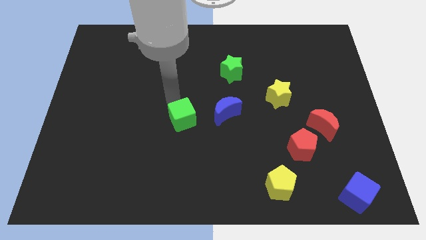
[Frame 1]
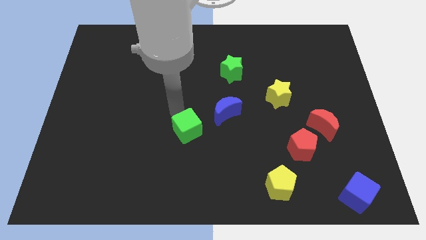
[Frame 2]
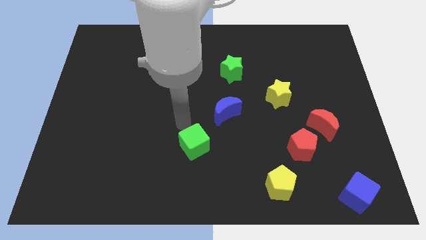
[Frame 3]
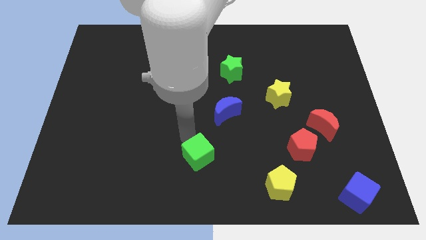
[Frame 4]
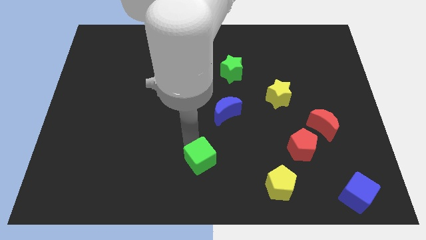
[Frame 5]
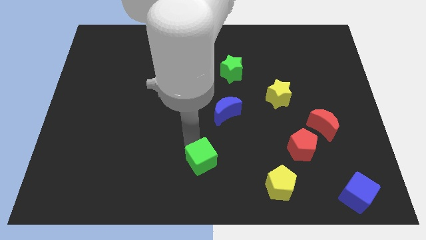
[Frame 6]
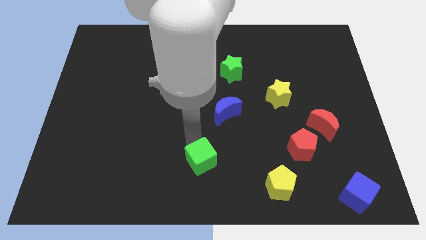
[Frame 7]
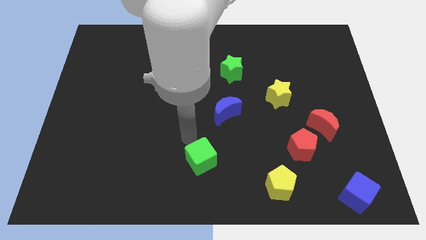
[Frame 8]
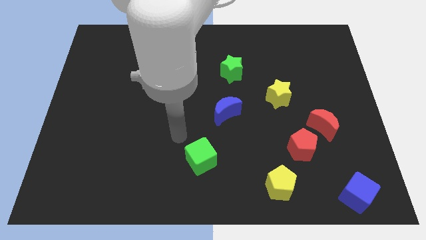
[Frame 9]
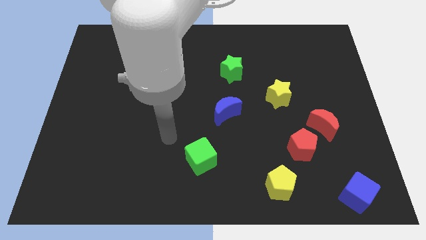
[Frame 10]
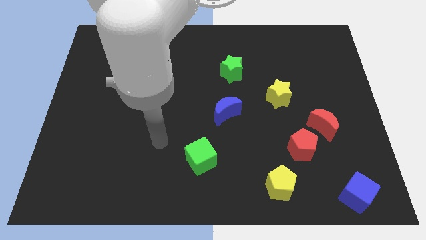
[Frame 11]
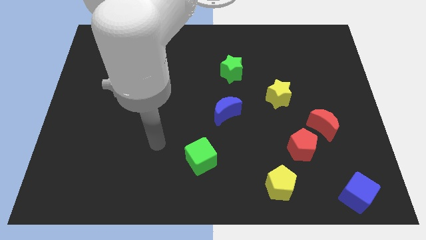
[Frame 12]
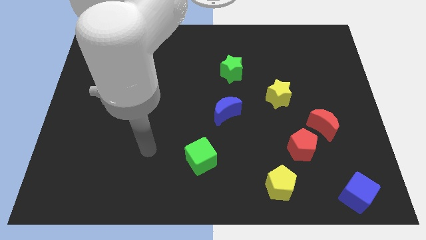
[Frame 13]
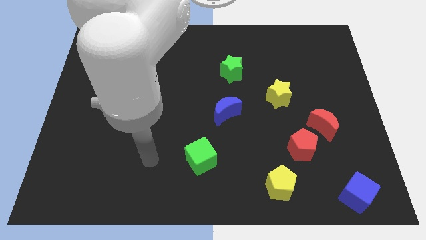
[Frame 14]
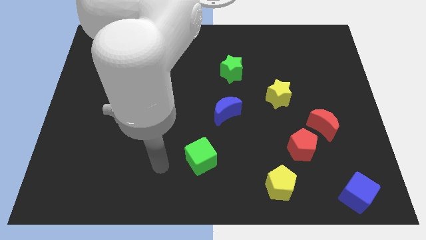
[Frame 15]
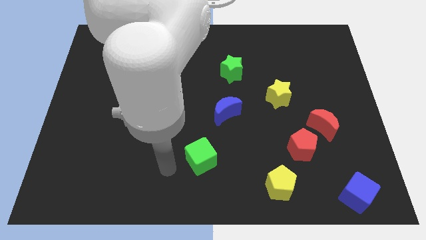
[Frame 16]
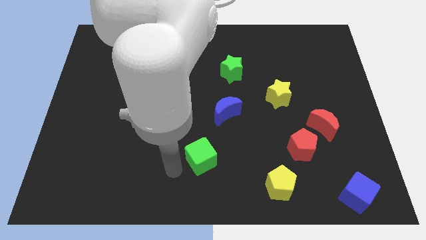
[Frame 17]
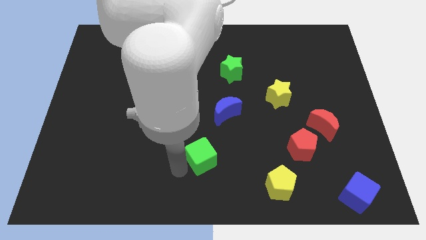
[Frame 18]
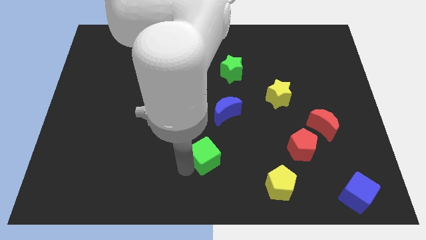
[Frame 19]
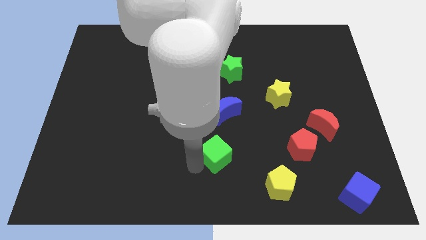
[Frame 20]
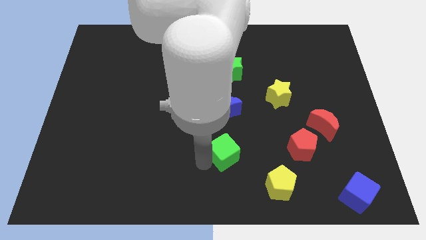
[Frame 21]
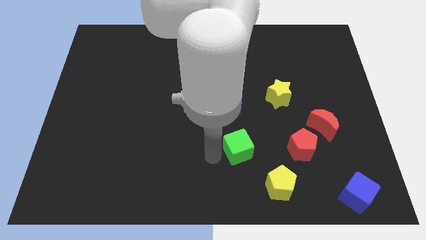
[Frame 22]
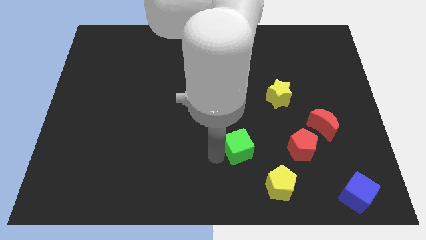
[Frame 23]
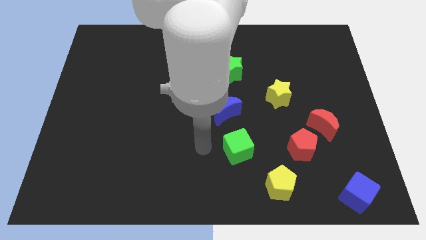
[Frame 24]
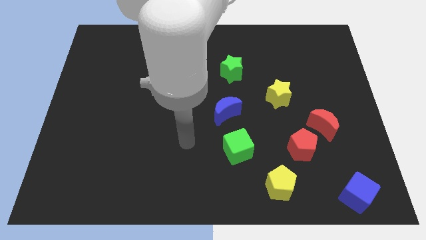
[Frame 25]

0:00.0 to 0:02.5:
move the green cube to the bottom side of the blue moon

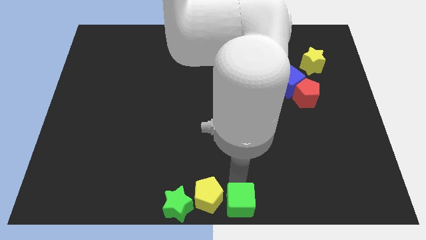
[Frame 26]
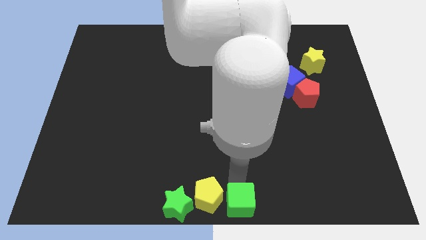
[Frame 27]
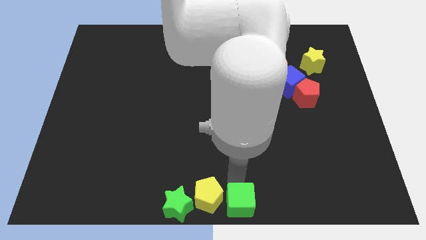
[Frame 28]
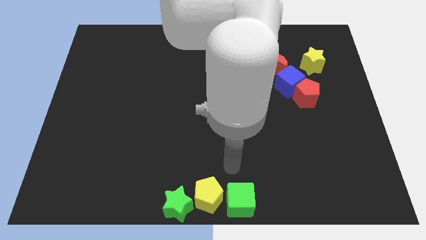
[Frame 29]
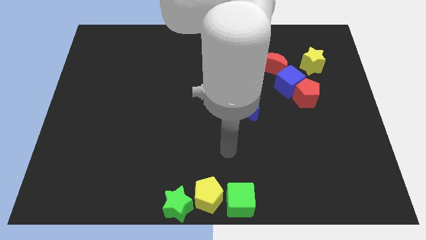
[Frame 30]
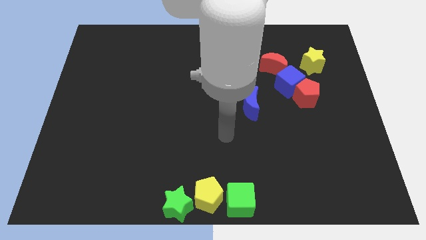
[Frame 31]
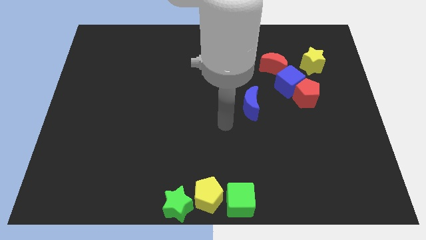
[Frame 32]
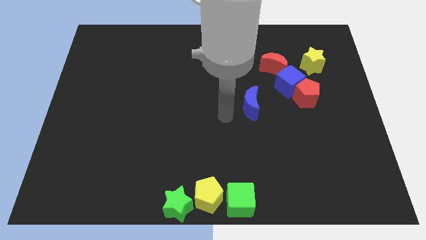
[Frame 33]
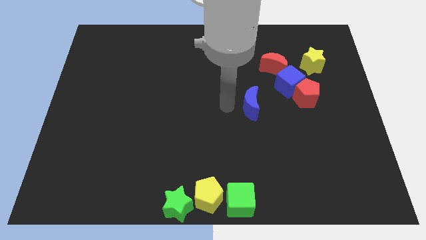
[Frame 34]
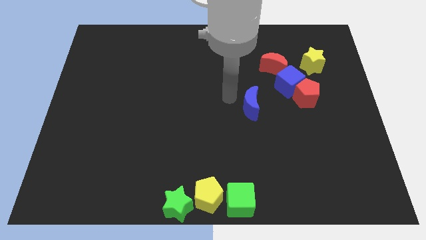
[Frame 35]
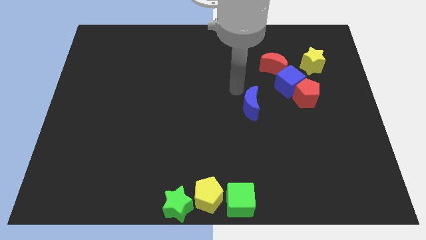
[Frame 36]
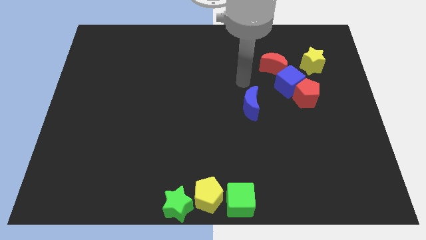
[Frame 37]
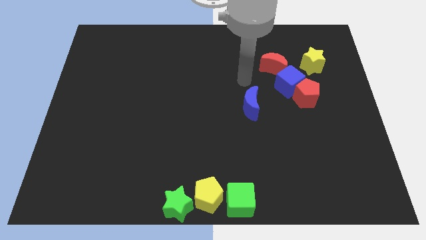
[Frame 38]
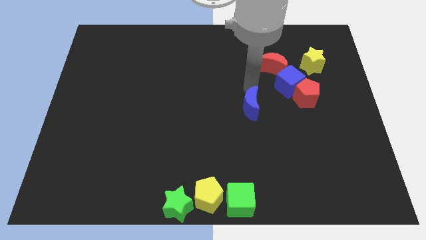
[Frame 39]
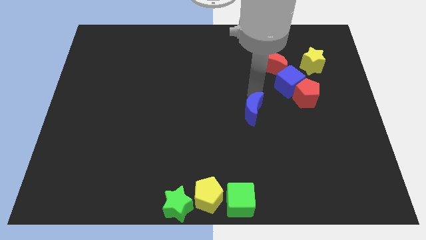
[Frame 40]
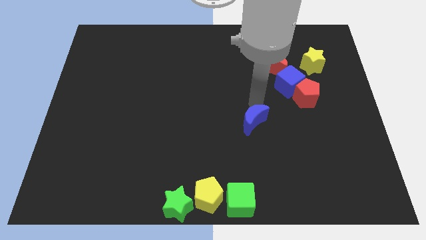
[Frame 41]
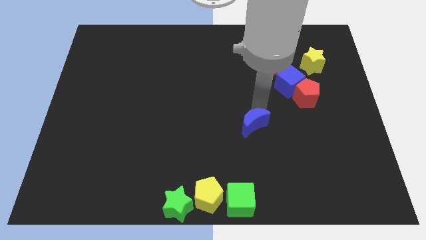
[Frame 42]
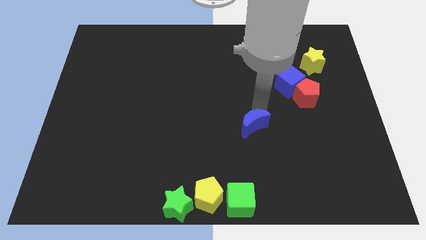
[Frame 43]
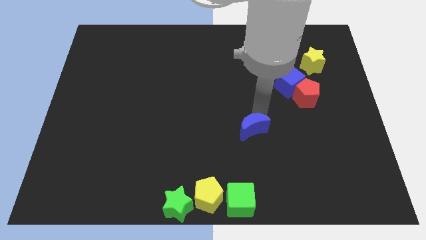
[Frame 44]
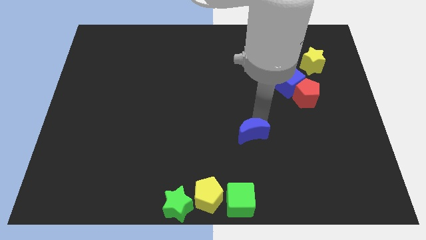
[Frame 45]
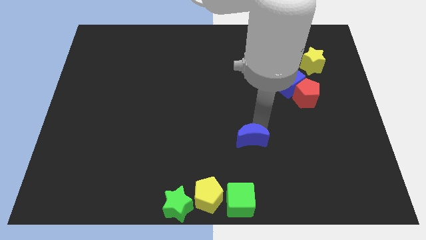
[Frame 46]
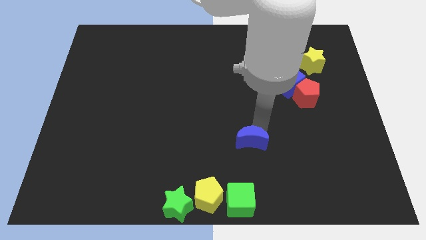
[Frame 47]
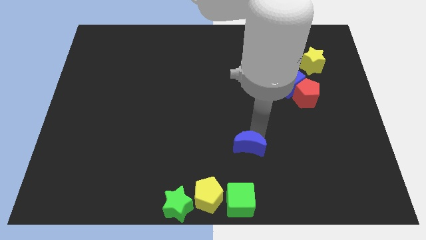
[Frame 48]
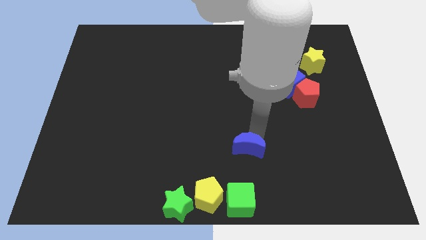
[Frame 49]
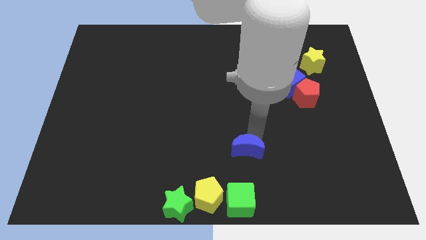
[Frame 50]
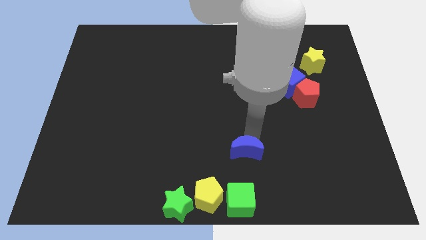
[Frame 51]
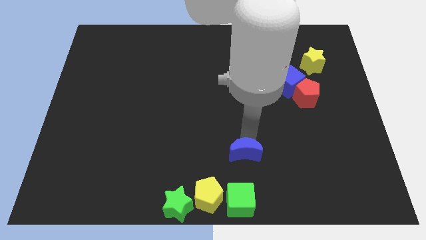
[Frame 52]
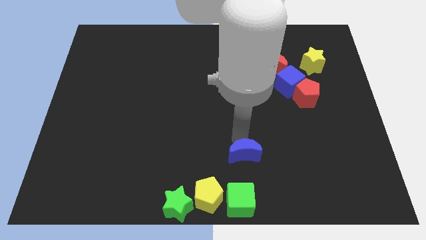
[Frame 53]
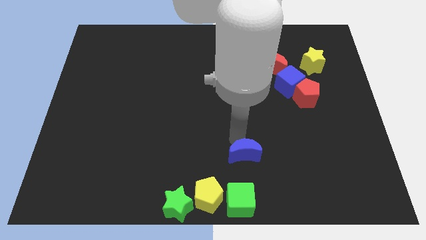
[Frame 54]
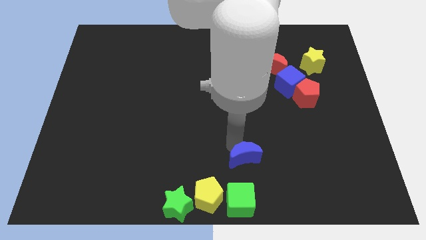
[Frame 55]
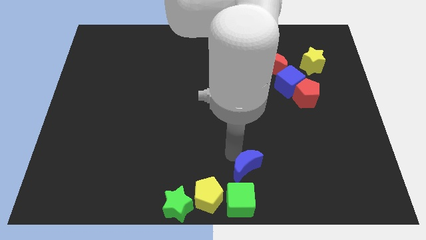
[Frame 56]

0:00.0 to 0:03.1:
drag the blue moon close to the green cube

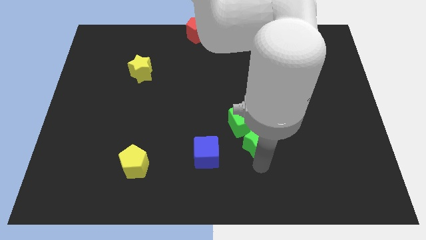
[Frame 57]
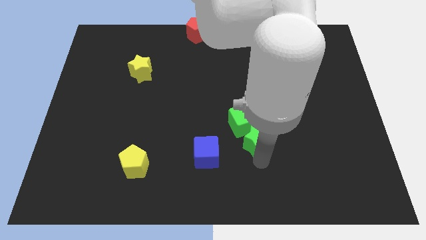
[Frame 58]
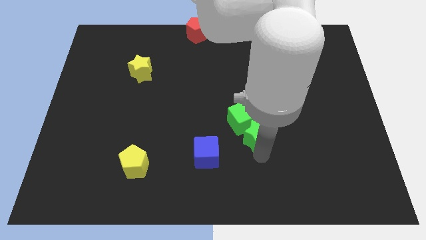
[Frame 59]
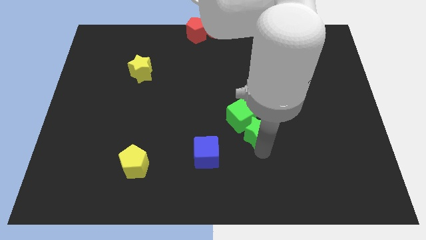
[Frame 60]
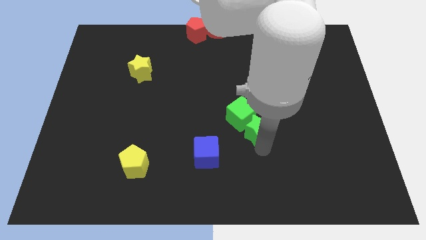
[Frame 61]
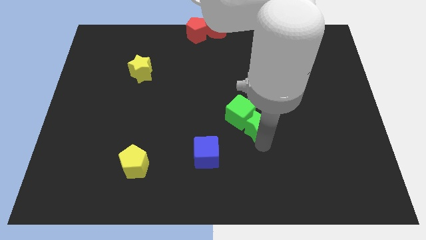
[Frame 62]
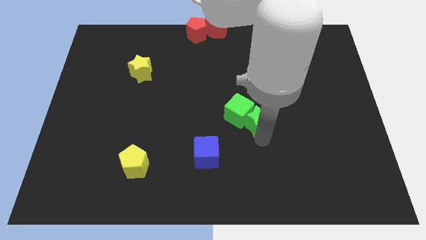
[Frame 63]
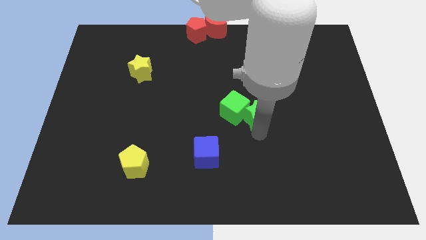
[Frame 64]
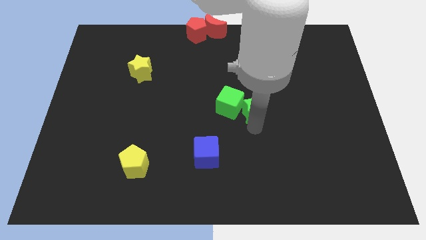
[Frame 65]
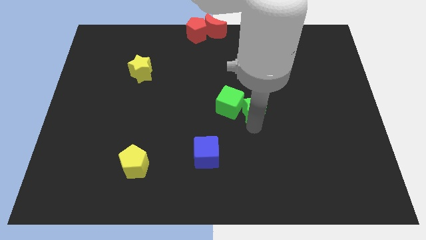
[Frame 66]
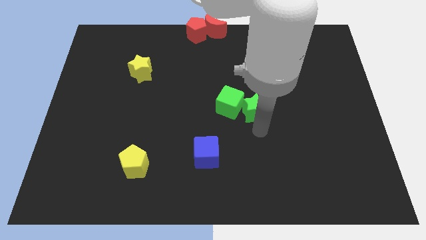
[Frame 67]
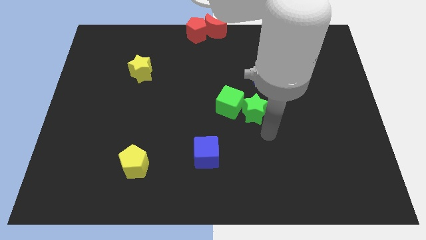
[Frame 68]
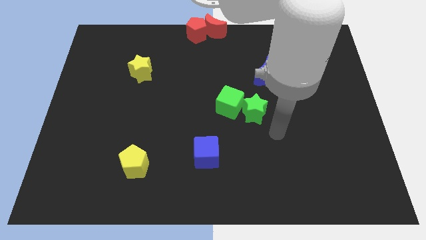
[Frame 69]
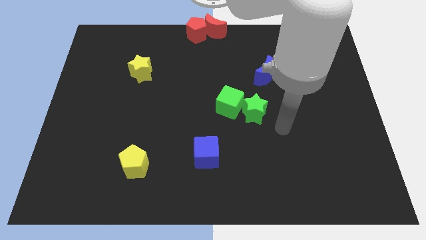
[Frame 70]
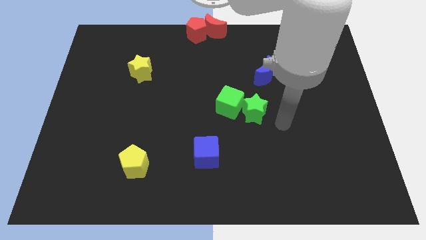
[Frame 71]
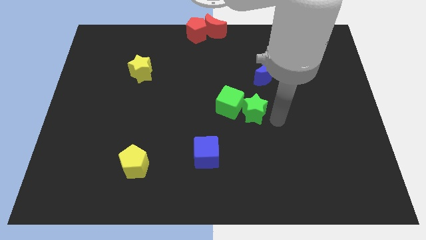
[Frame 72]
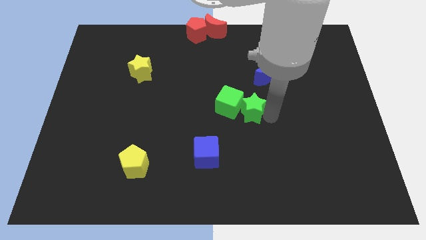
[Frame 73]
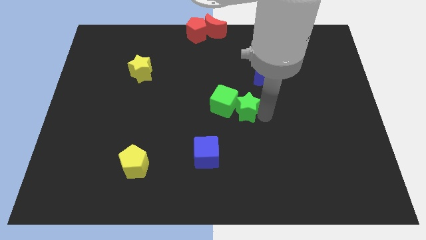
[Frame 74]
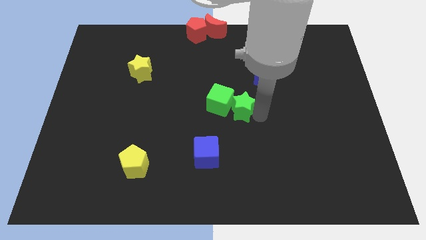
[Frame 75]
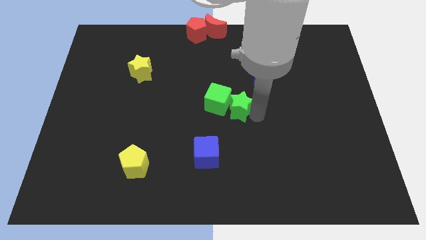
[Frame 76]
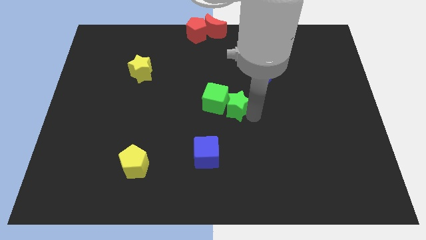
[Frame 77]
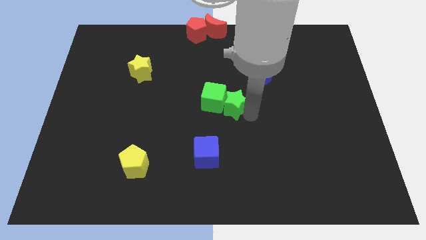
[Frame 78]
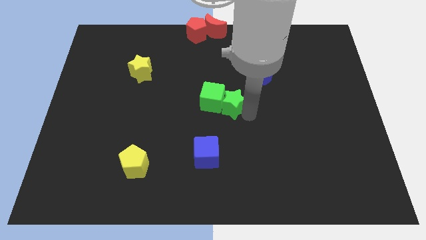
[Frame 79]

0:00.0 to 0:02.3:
place the green blocks in the middle of the board

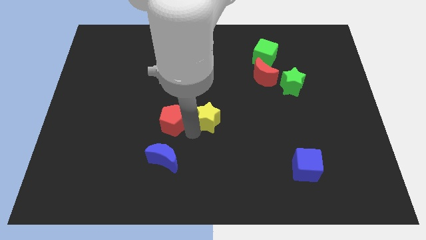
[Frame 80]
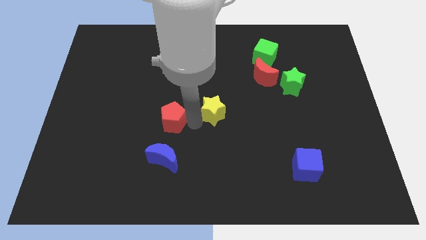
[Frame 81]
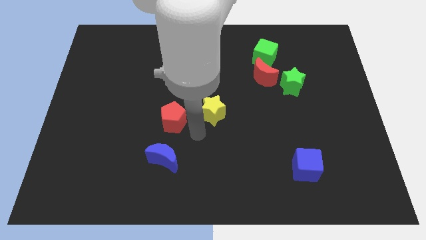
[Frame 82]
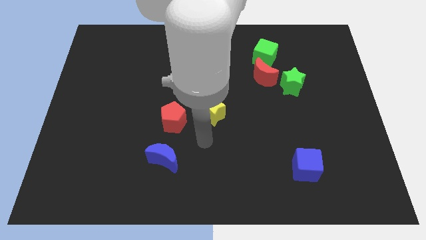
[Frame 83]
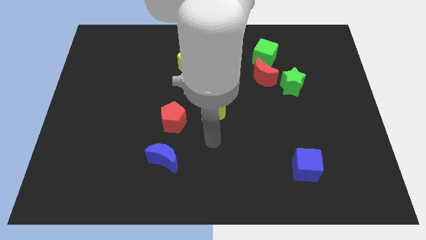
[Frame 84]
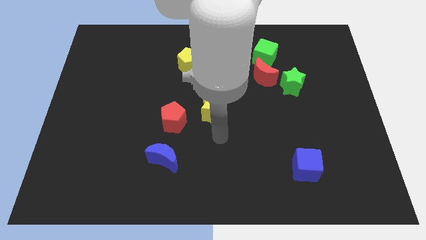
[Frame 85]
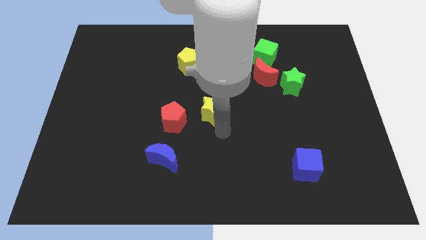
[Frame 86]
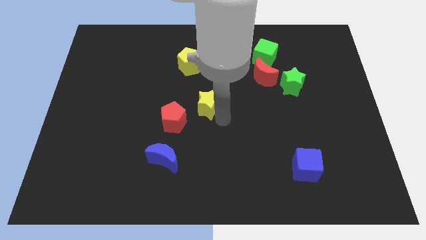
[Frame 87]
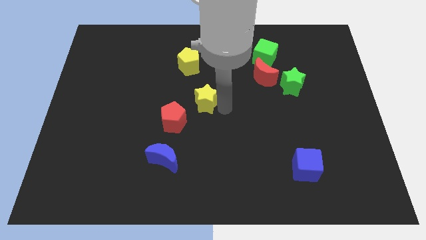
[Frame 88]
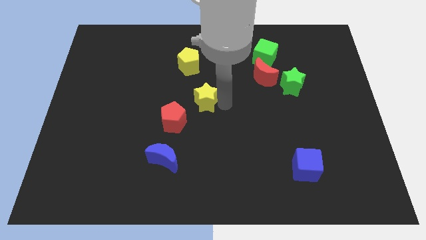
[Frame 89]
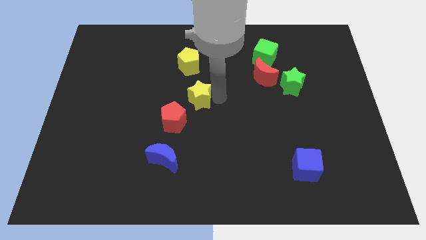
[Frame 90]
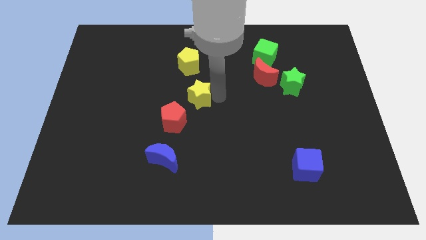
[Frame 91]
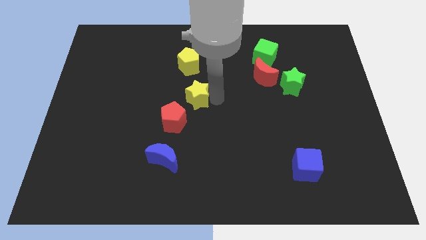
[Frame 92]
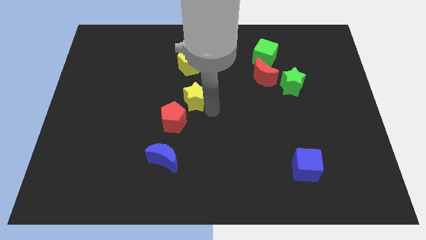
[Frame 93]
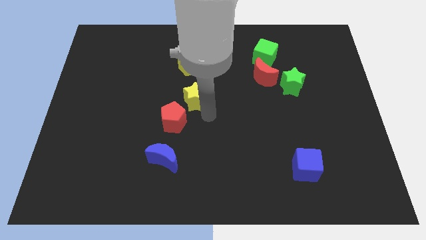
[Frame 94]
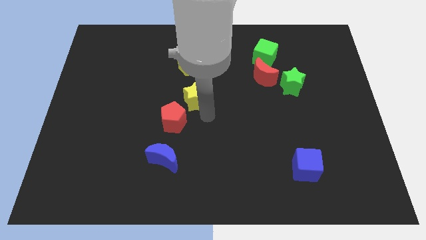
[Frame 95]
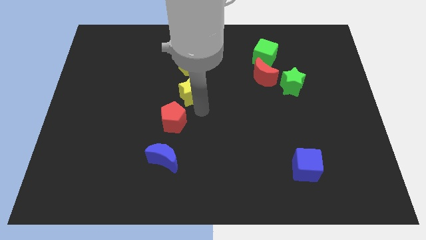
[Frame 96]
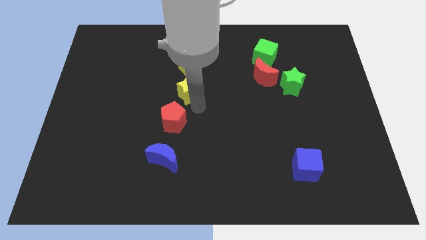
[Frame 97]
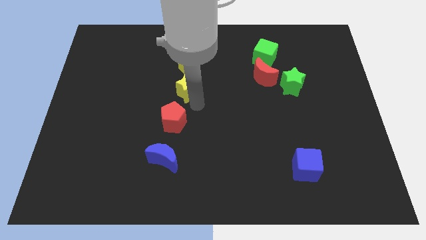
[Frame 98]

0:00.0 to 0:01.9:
place the yellow star between the red pentagon and yellow pentagon
